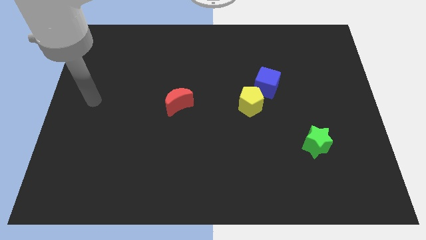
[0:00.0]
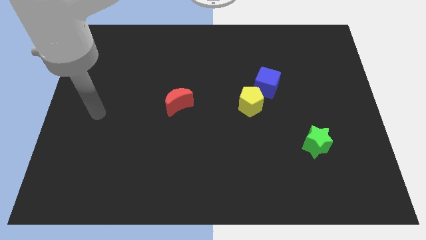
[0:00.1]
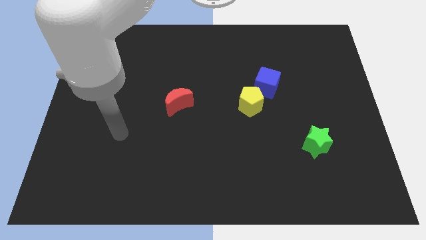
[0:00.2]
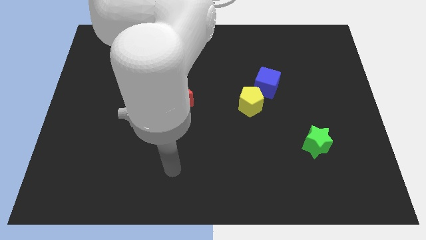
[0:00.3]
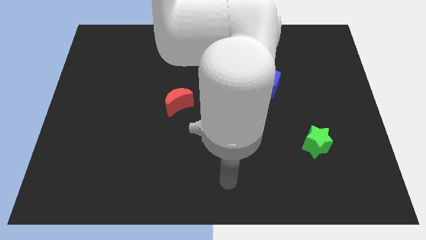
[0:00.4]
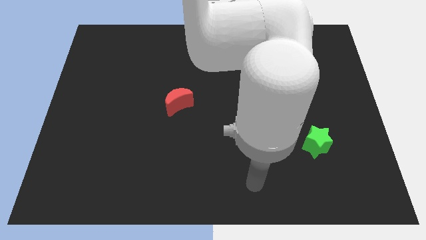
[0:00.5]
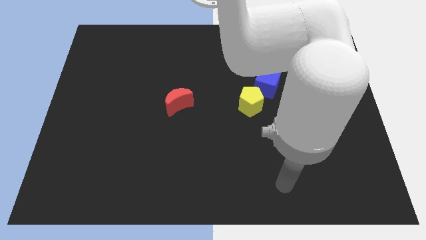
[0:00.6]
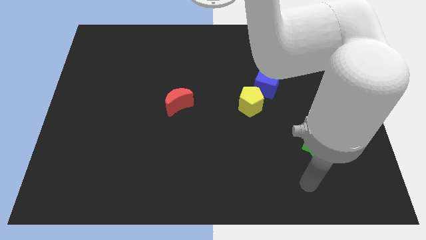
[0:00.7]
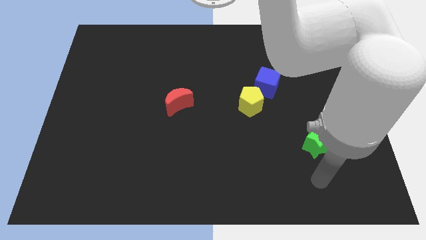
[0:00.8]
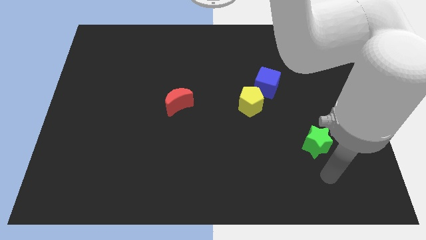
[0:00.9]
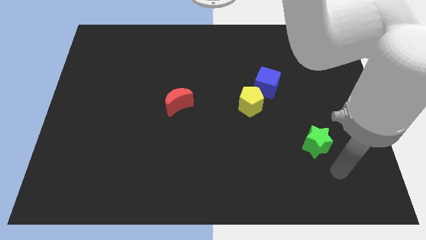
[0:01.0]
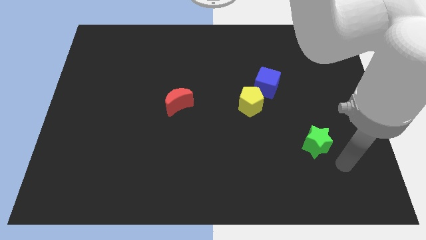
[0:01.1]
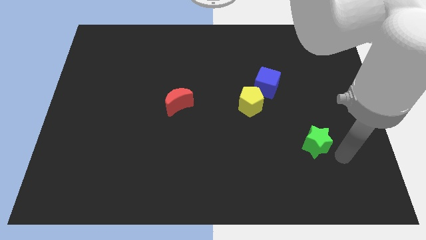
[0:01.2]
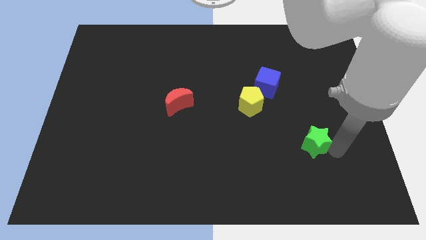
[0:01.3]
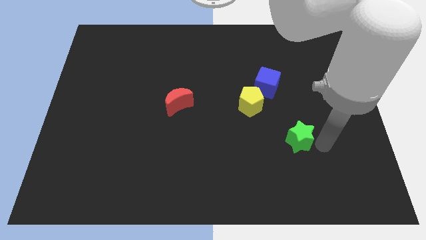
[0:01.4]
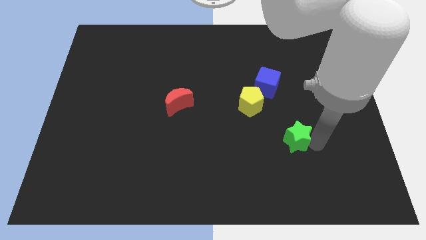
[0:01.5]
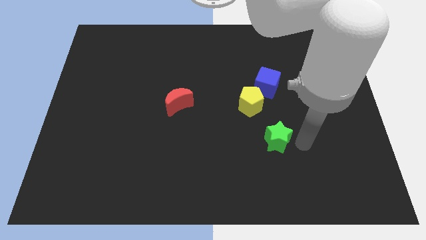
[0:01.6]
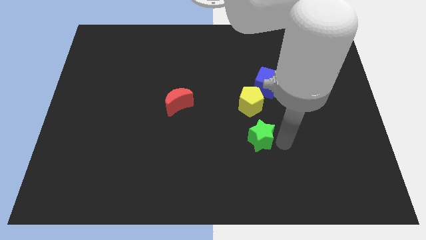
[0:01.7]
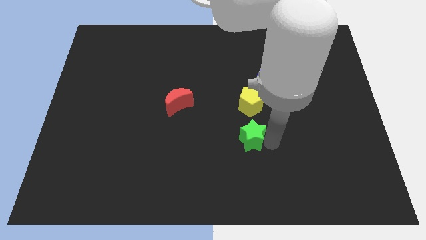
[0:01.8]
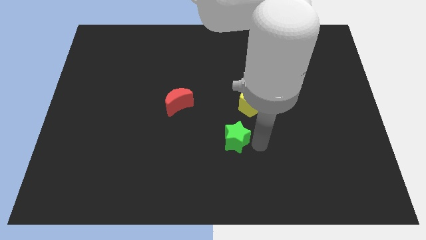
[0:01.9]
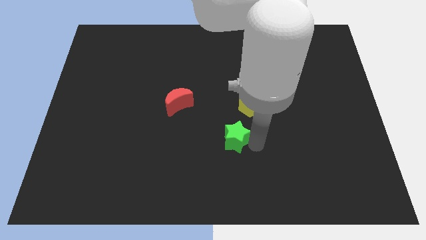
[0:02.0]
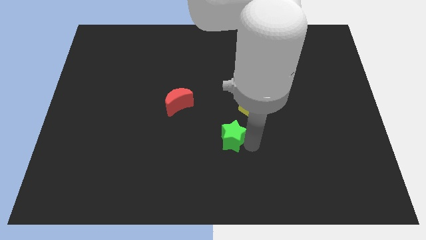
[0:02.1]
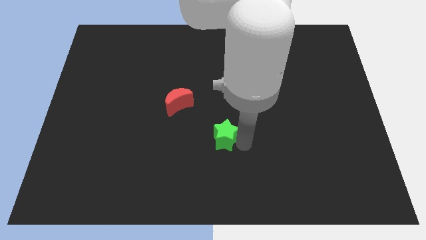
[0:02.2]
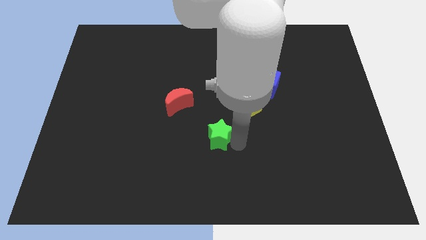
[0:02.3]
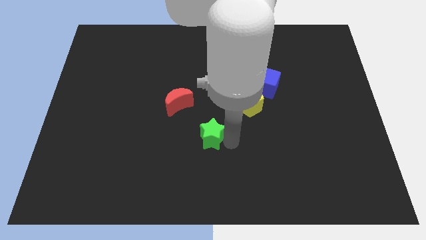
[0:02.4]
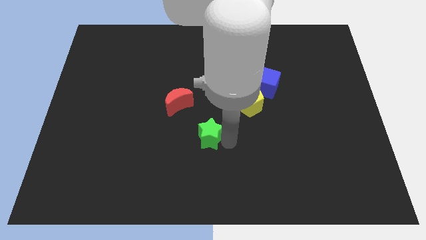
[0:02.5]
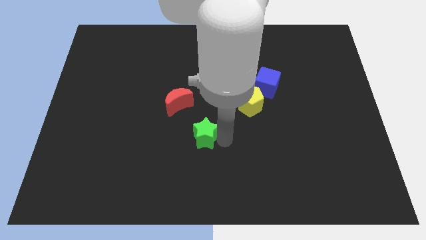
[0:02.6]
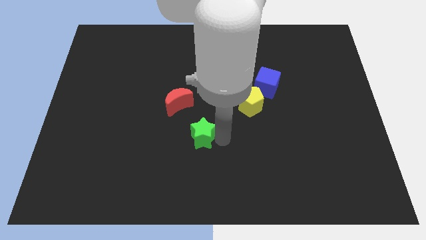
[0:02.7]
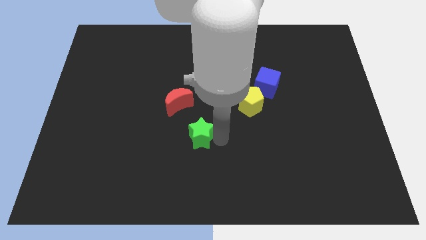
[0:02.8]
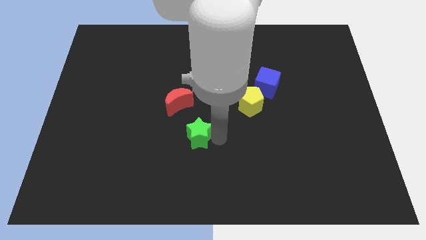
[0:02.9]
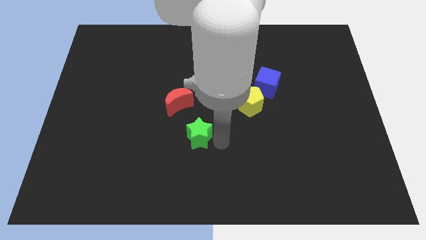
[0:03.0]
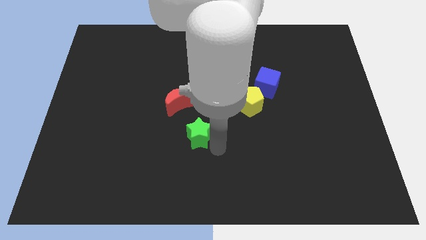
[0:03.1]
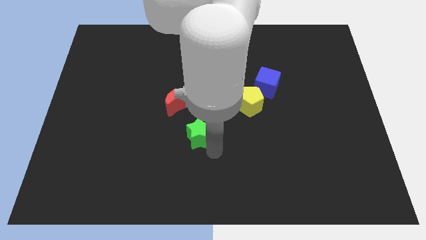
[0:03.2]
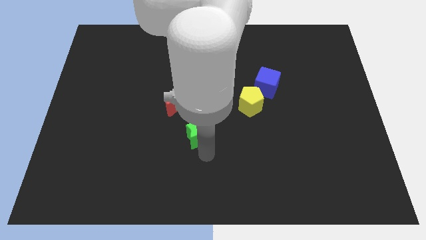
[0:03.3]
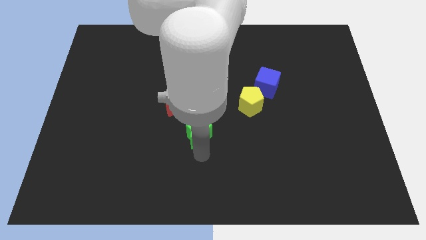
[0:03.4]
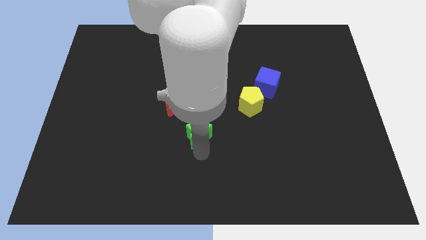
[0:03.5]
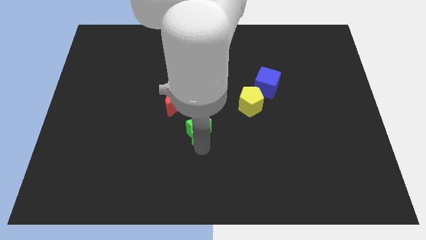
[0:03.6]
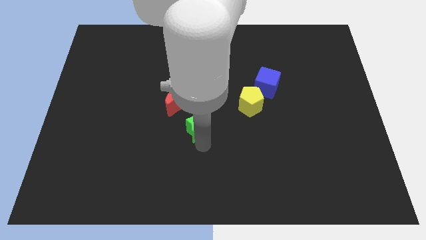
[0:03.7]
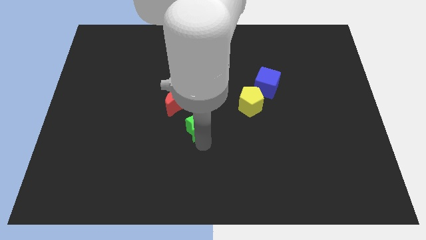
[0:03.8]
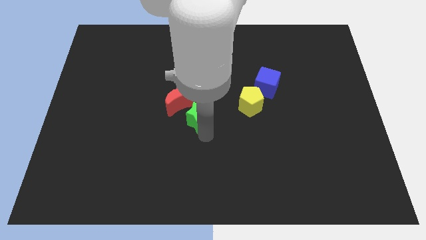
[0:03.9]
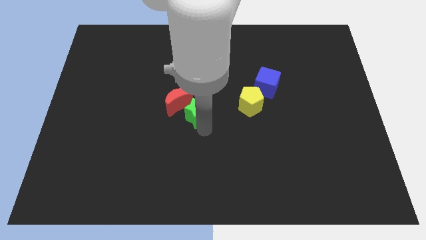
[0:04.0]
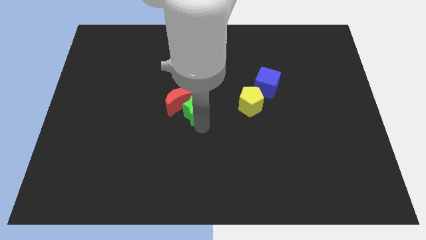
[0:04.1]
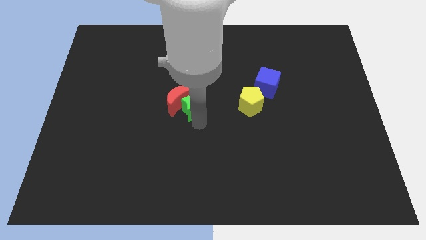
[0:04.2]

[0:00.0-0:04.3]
slide the green star next to the red block

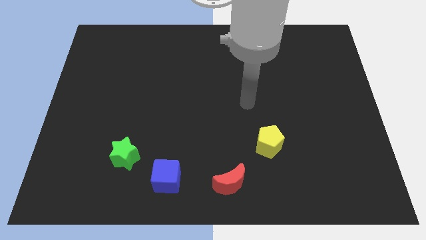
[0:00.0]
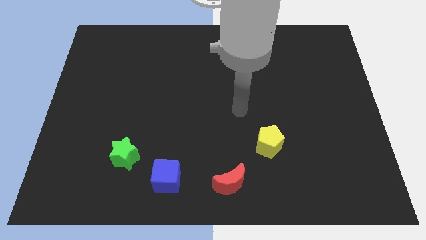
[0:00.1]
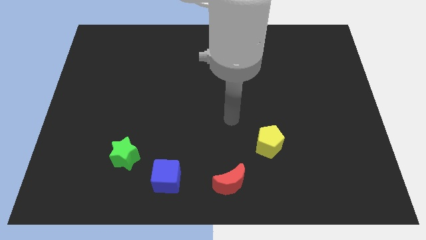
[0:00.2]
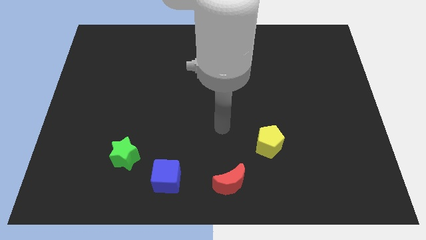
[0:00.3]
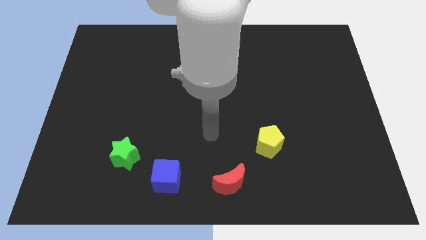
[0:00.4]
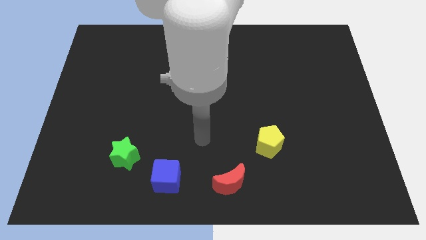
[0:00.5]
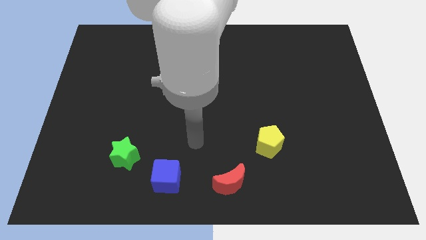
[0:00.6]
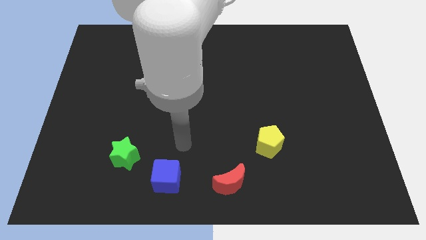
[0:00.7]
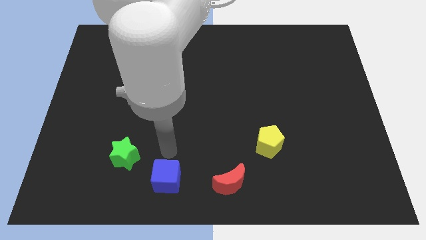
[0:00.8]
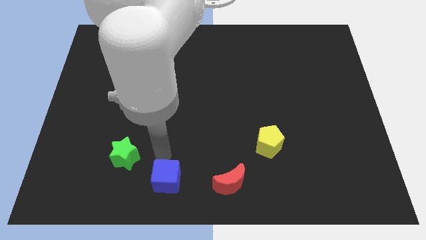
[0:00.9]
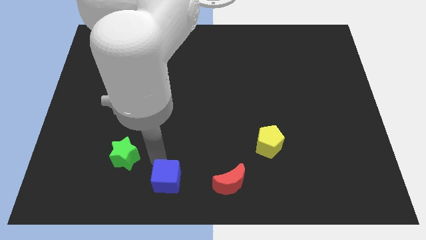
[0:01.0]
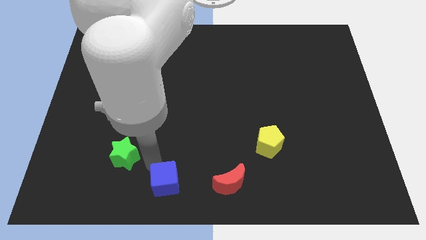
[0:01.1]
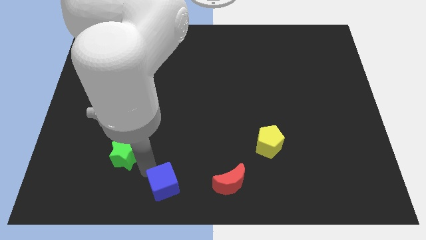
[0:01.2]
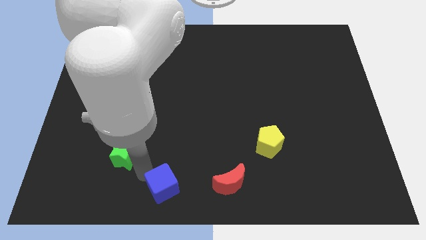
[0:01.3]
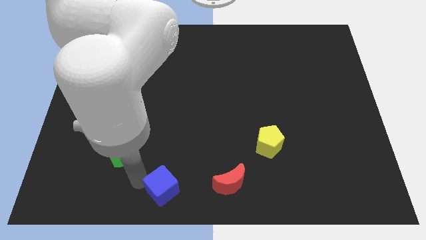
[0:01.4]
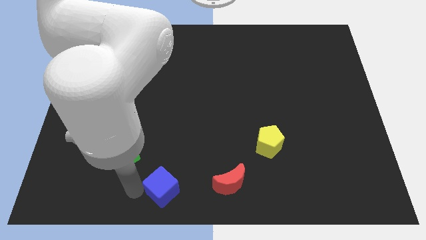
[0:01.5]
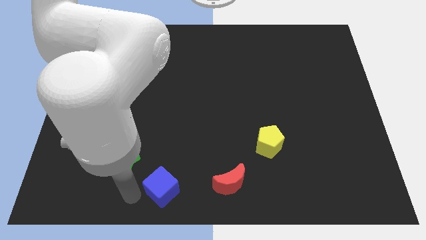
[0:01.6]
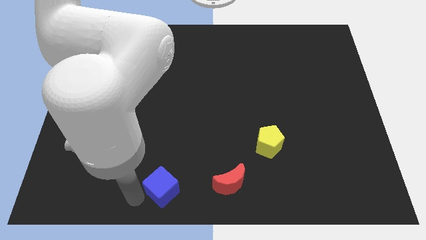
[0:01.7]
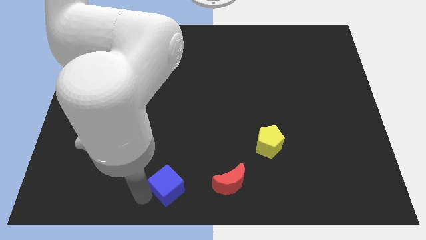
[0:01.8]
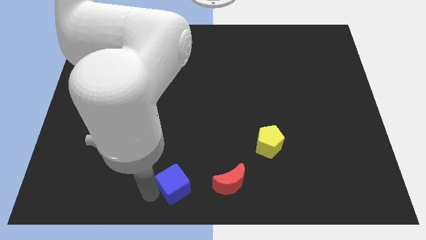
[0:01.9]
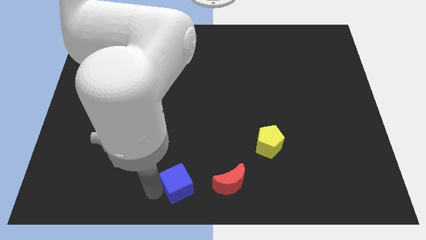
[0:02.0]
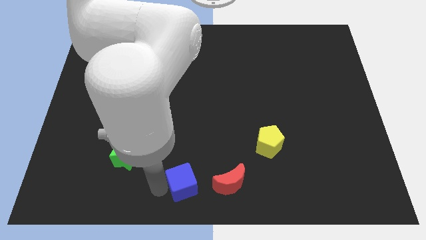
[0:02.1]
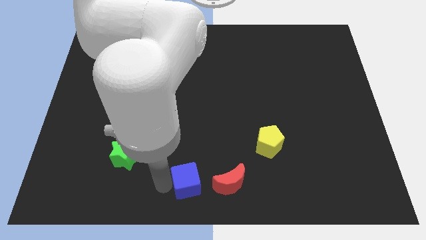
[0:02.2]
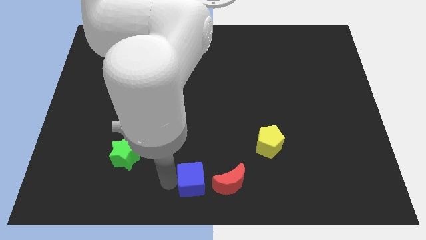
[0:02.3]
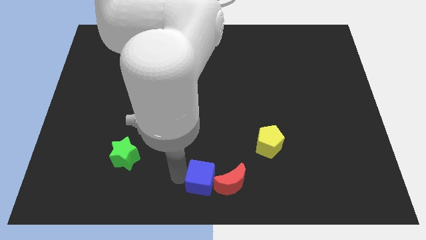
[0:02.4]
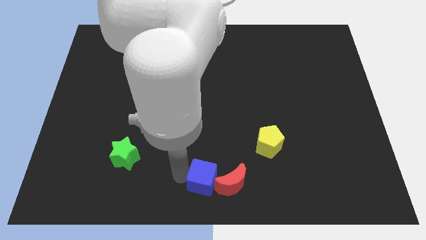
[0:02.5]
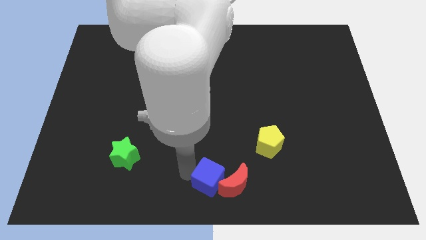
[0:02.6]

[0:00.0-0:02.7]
put the blue cube next to the red moon

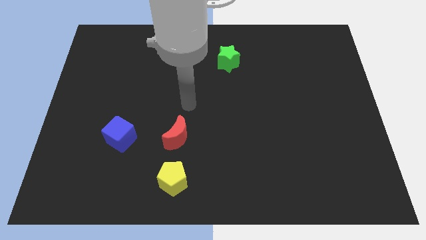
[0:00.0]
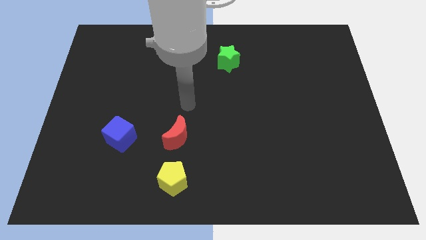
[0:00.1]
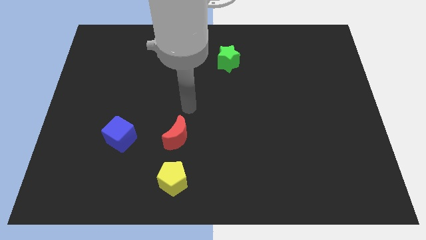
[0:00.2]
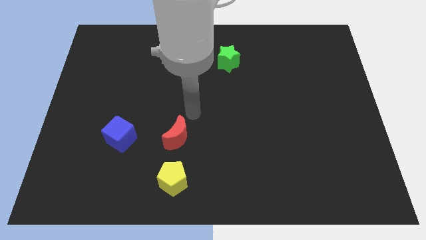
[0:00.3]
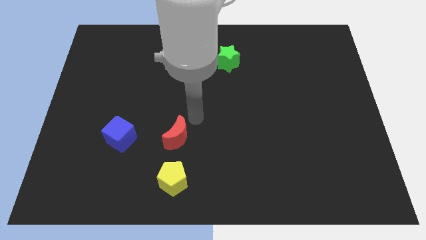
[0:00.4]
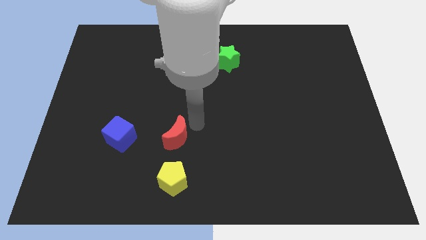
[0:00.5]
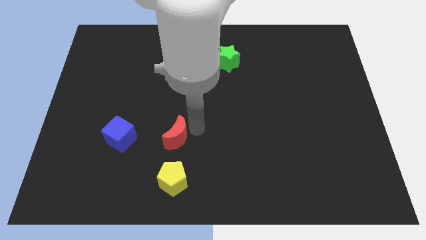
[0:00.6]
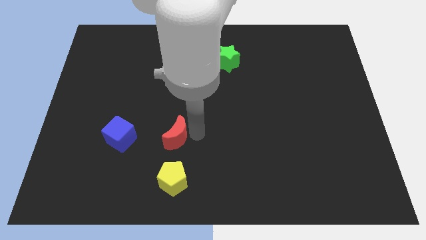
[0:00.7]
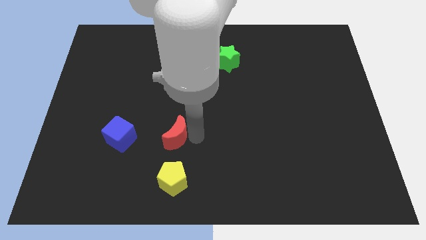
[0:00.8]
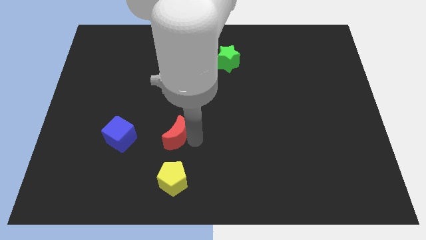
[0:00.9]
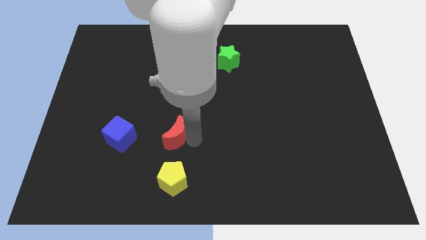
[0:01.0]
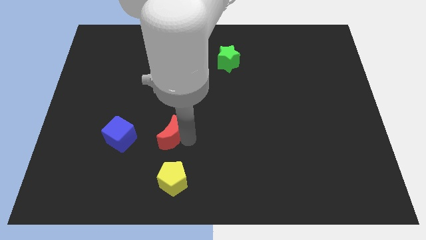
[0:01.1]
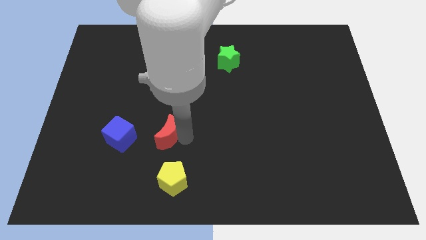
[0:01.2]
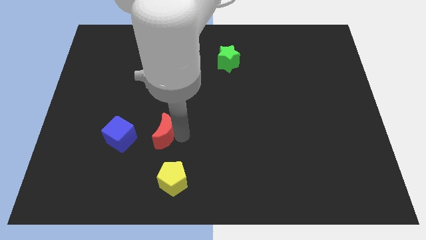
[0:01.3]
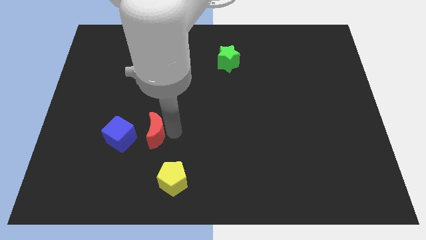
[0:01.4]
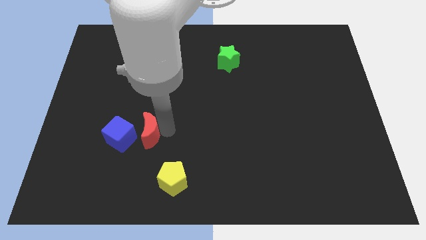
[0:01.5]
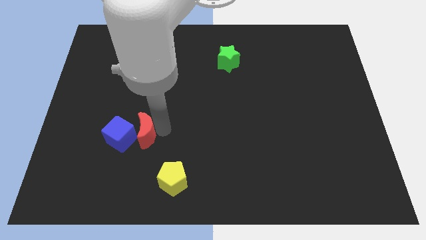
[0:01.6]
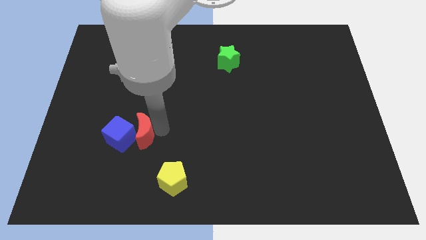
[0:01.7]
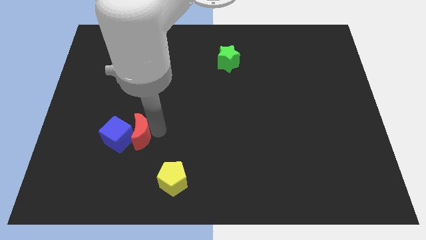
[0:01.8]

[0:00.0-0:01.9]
push the moon to the blue cube
